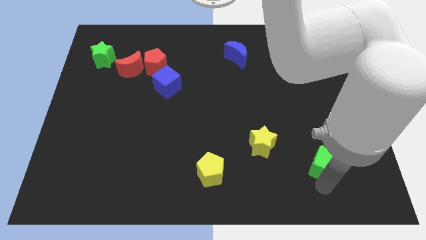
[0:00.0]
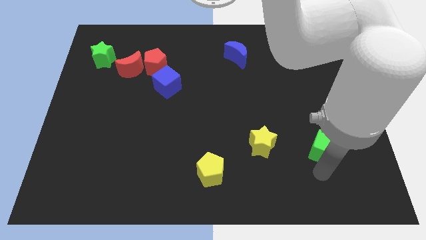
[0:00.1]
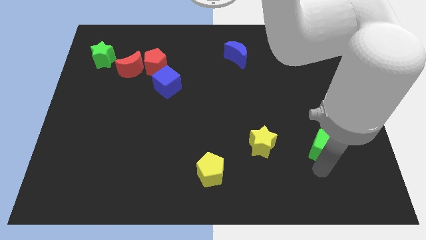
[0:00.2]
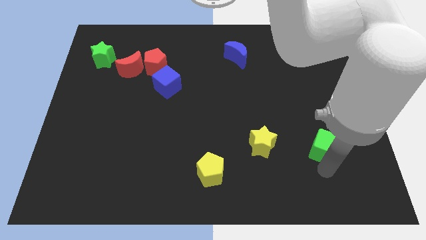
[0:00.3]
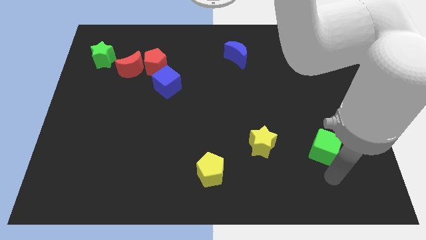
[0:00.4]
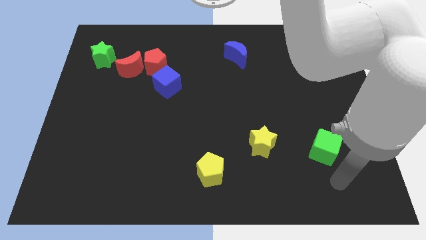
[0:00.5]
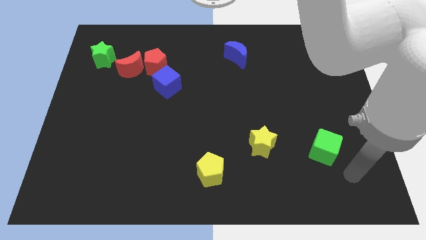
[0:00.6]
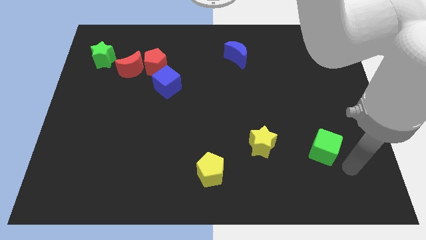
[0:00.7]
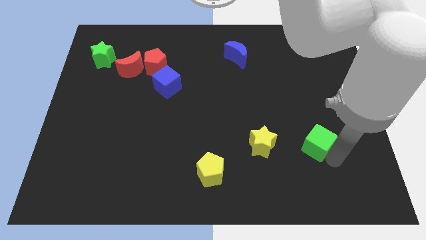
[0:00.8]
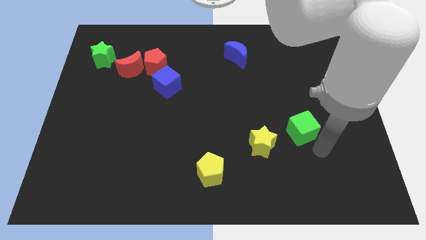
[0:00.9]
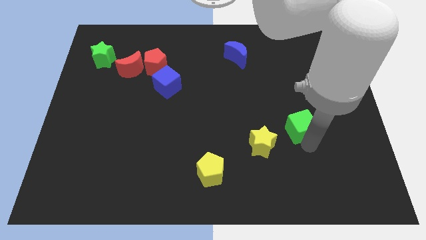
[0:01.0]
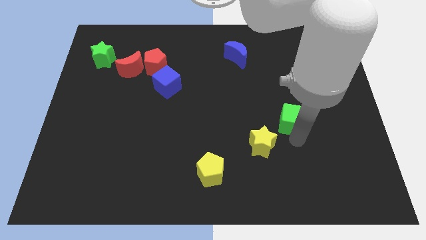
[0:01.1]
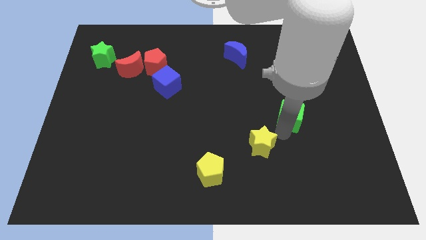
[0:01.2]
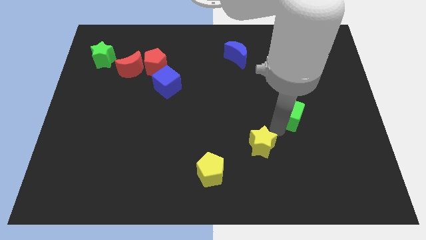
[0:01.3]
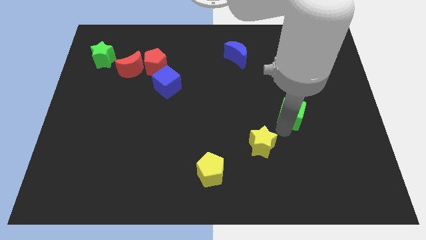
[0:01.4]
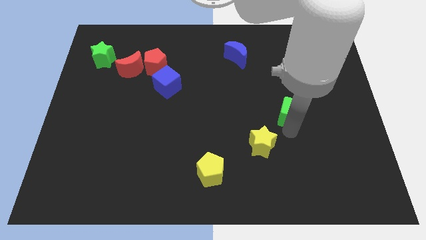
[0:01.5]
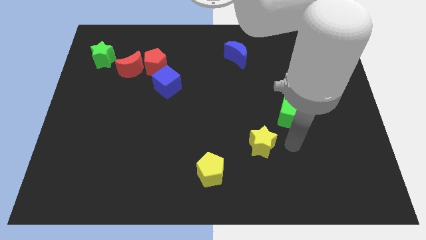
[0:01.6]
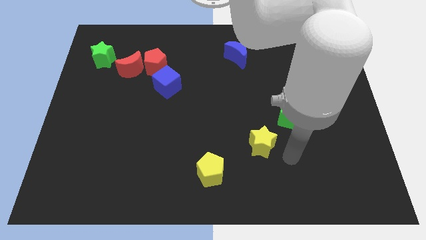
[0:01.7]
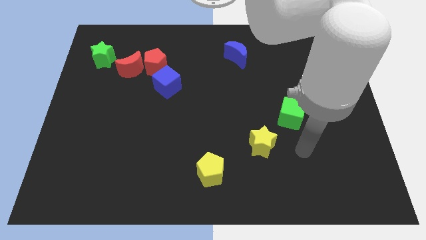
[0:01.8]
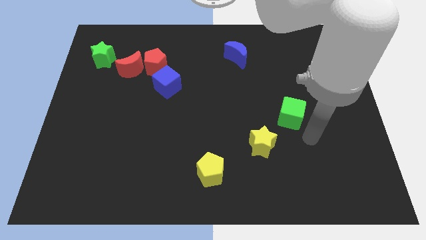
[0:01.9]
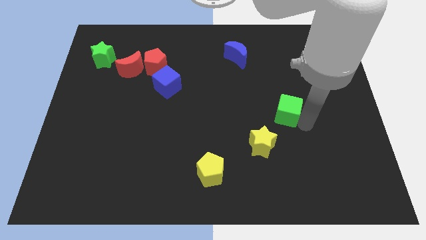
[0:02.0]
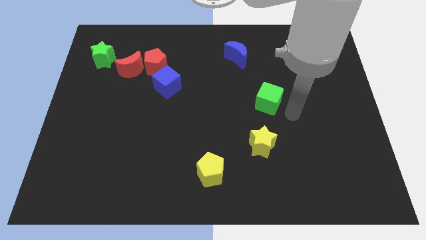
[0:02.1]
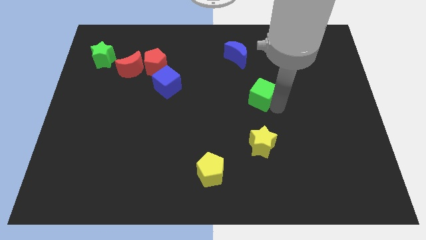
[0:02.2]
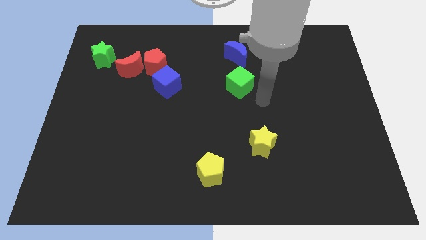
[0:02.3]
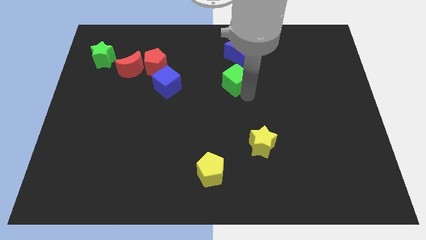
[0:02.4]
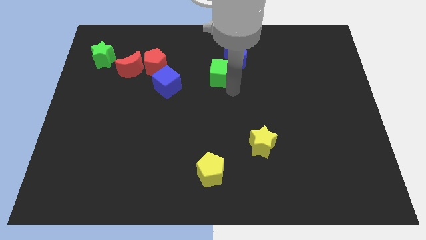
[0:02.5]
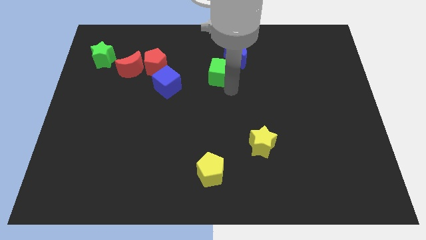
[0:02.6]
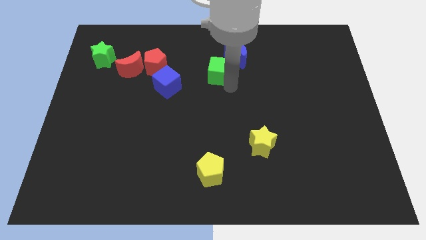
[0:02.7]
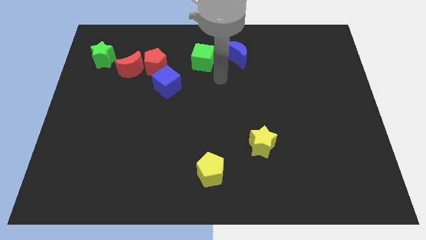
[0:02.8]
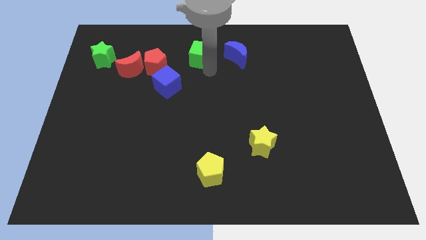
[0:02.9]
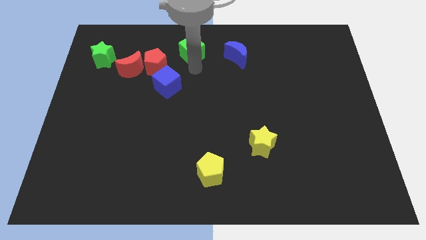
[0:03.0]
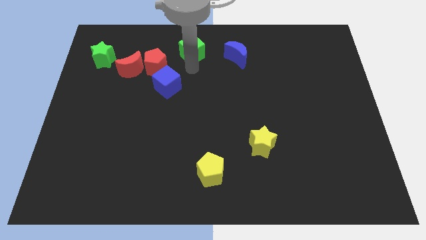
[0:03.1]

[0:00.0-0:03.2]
move the green cube parallel left to the blue moon

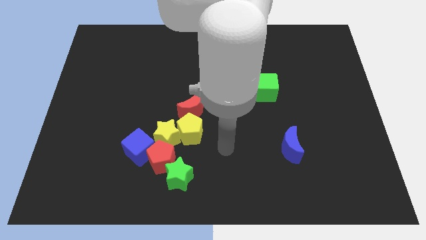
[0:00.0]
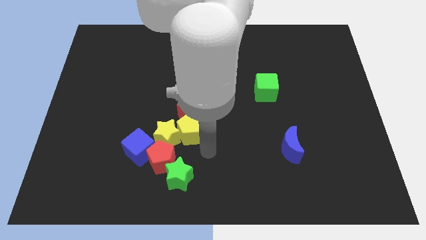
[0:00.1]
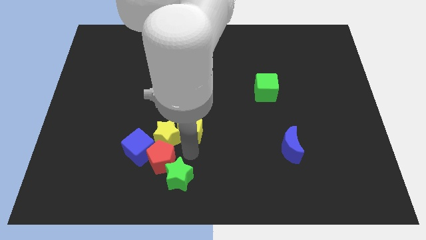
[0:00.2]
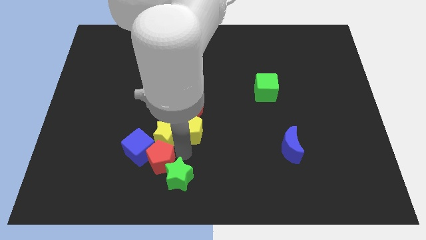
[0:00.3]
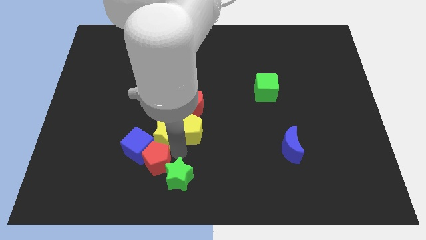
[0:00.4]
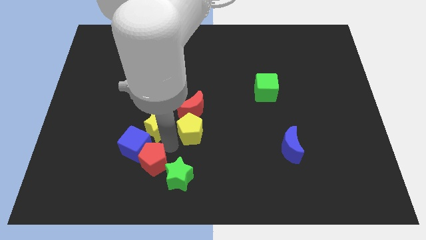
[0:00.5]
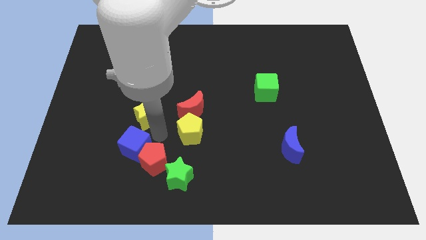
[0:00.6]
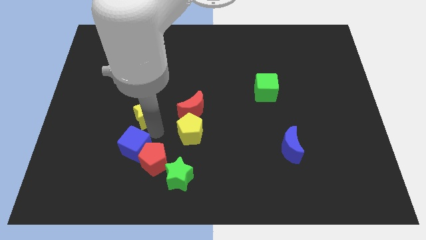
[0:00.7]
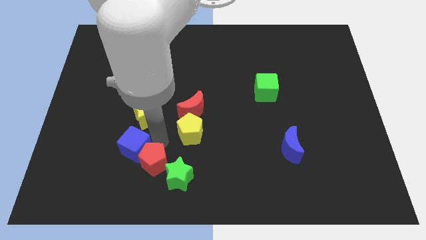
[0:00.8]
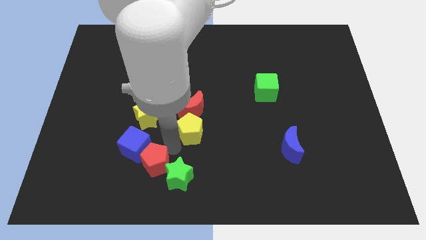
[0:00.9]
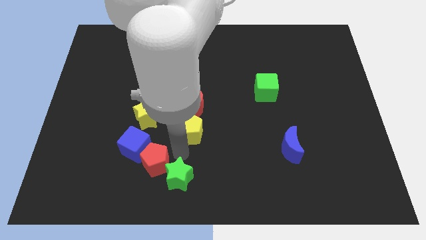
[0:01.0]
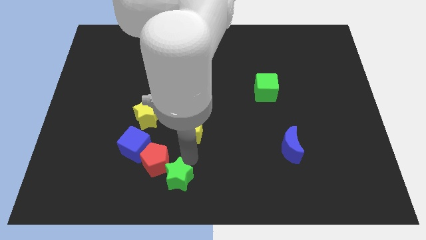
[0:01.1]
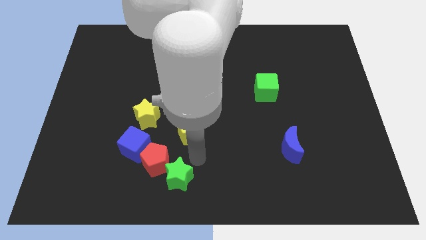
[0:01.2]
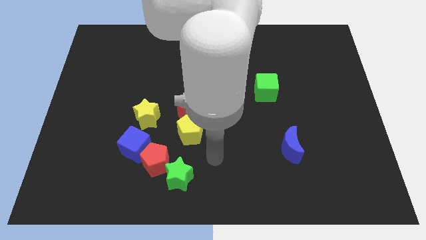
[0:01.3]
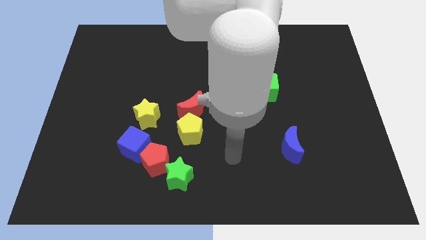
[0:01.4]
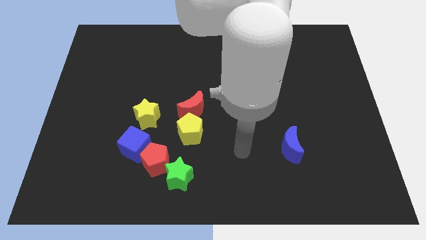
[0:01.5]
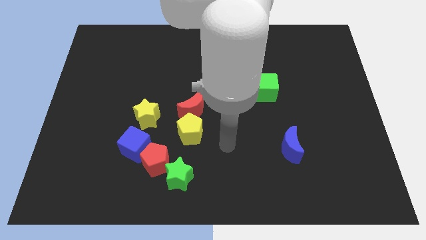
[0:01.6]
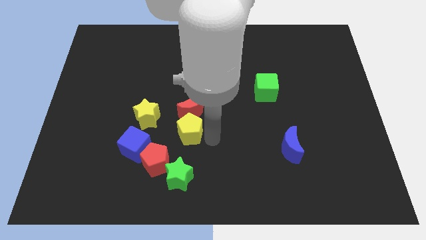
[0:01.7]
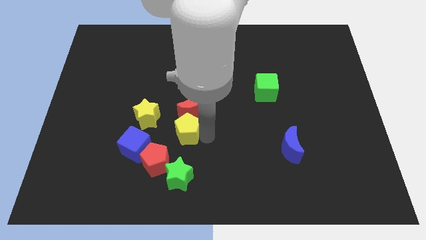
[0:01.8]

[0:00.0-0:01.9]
push the yellow star slightly upwards

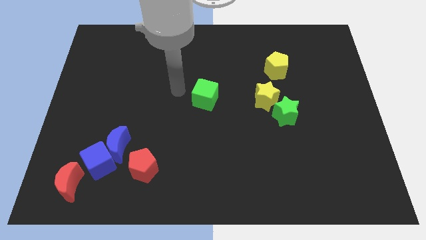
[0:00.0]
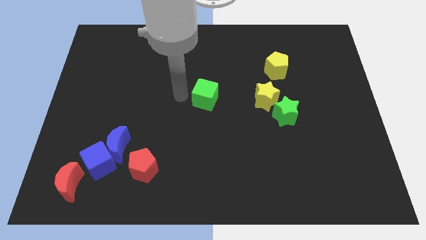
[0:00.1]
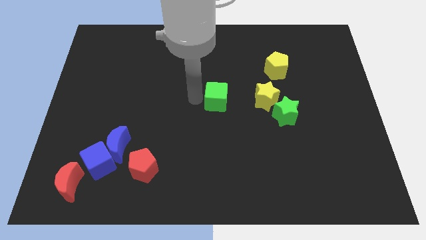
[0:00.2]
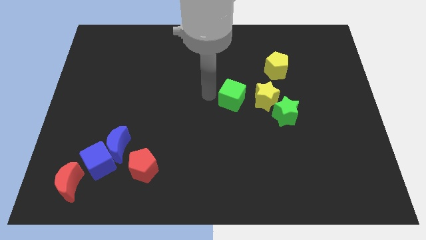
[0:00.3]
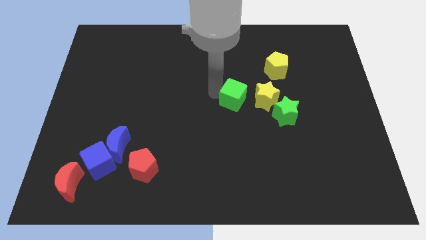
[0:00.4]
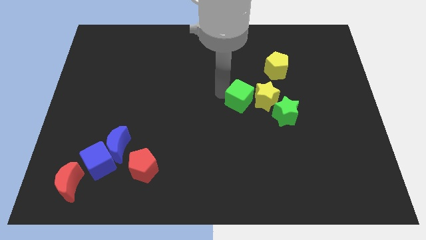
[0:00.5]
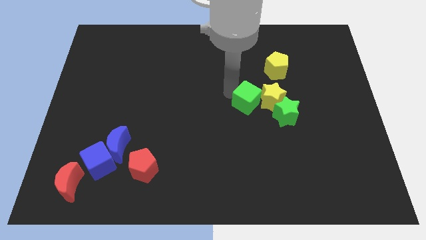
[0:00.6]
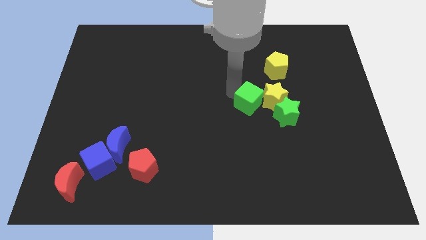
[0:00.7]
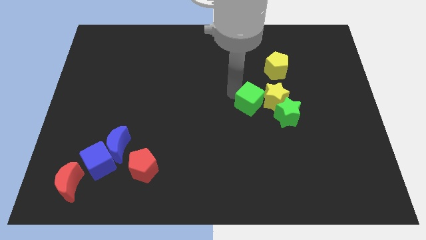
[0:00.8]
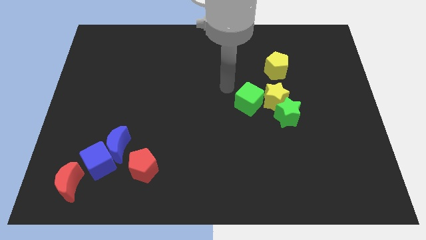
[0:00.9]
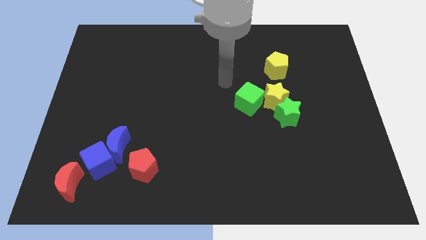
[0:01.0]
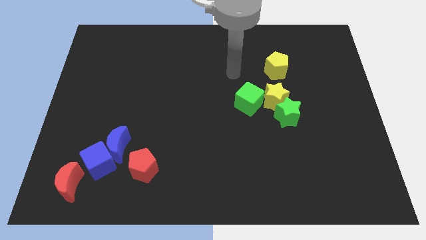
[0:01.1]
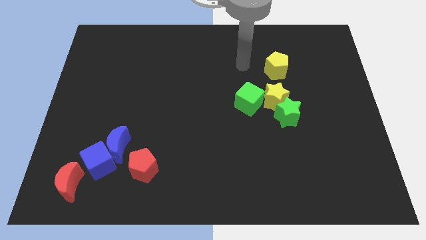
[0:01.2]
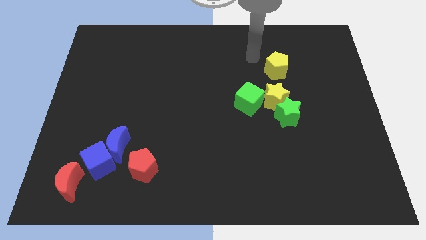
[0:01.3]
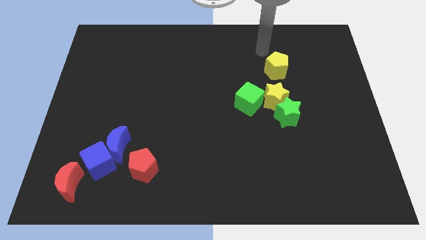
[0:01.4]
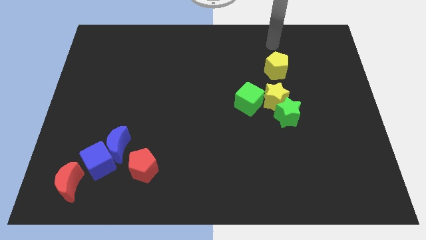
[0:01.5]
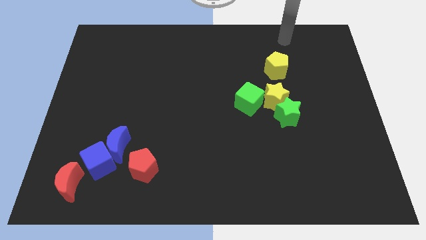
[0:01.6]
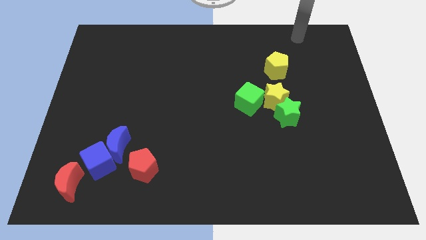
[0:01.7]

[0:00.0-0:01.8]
push the green cube diagonally on the bottom left side of the yellow pentagon

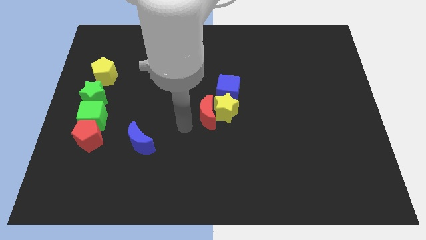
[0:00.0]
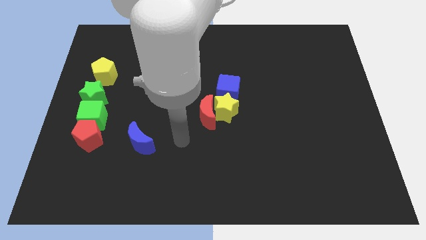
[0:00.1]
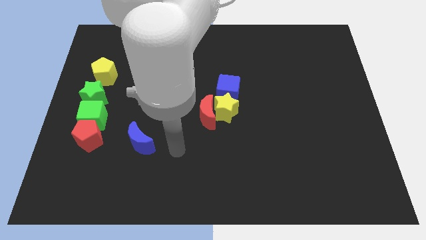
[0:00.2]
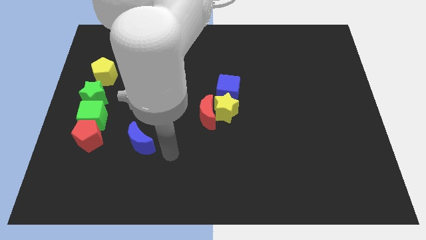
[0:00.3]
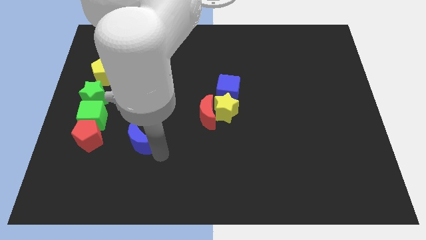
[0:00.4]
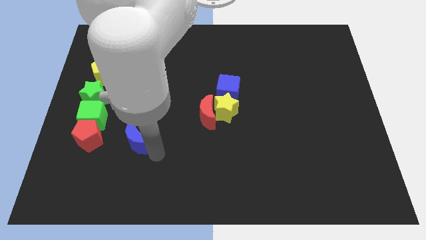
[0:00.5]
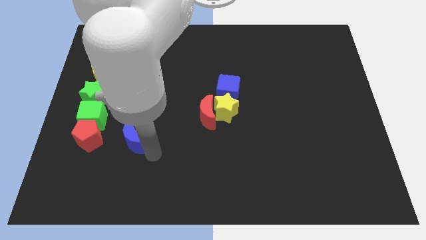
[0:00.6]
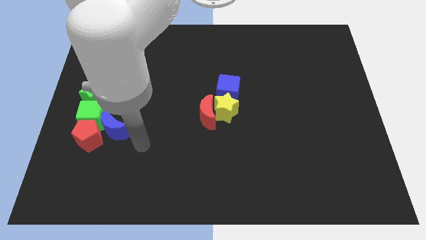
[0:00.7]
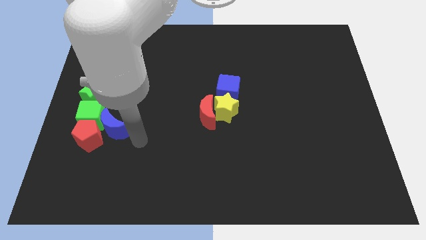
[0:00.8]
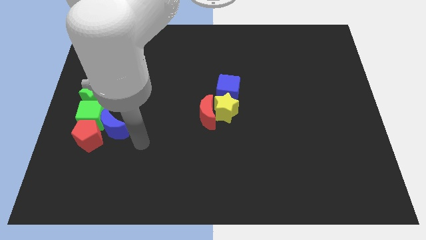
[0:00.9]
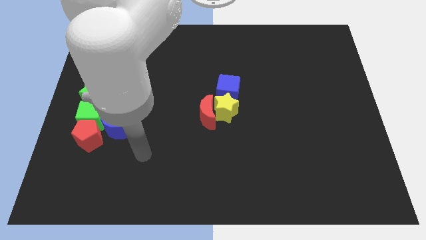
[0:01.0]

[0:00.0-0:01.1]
place blue moon to the right of the green cube

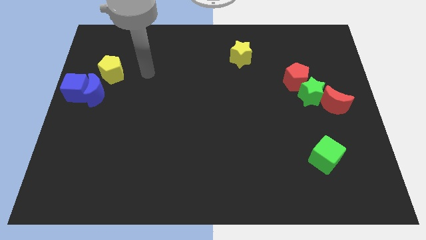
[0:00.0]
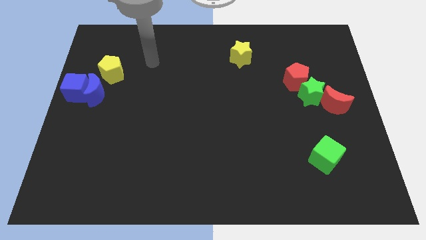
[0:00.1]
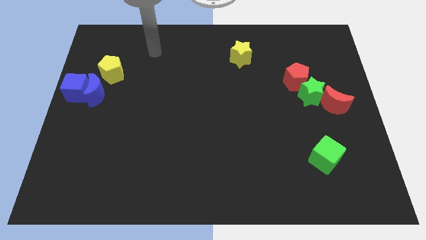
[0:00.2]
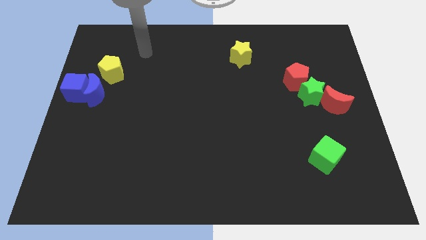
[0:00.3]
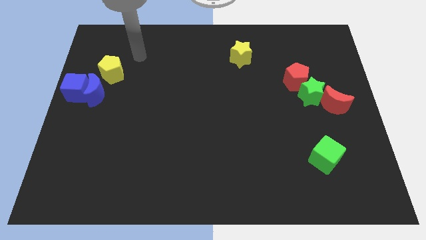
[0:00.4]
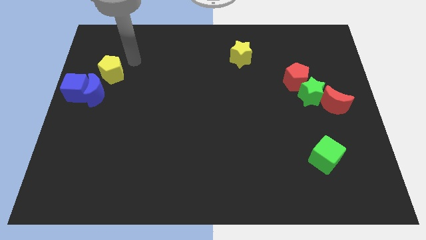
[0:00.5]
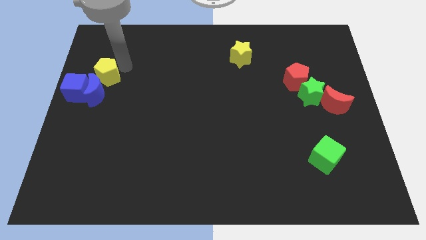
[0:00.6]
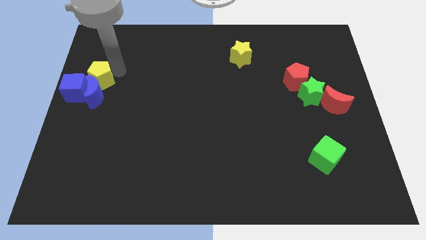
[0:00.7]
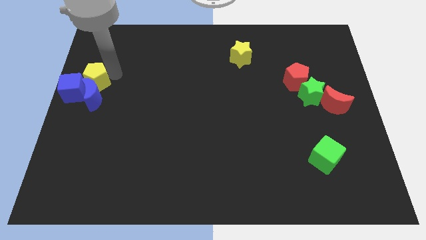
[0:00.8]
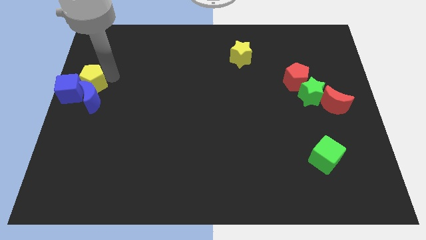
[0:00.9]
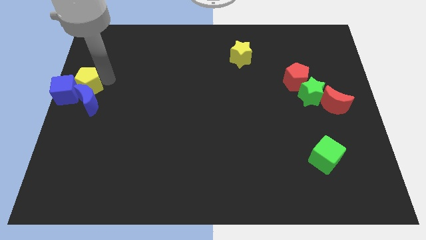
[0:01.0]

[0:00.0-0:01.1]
slide yellow pentagon into blue blocks
